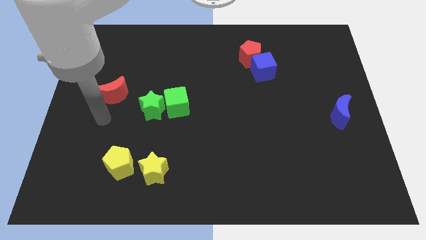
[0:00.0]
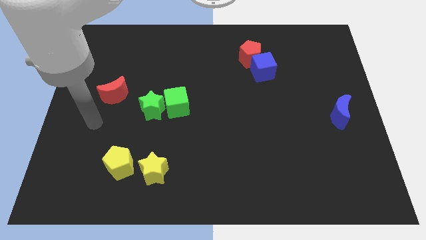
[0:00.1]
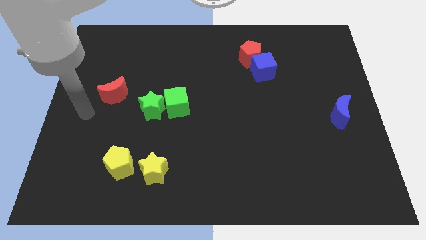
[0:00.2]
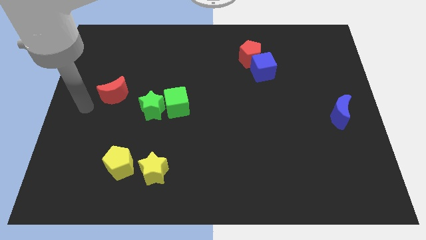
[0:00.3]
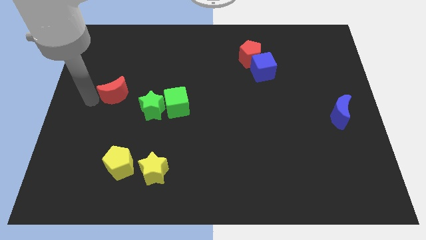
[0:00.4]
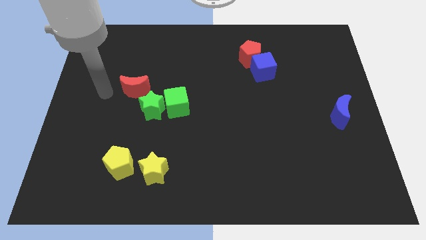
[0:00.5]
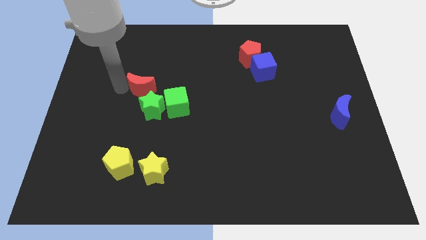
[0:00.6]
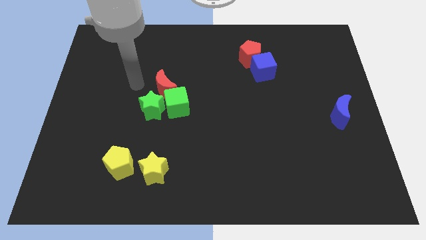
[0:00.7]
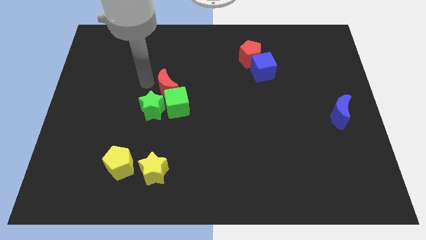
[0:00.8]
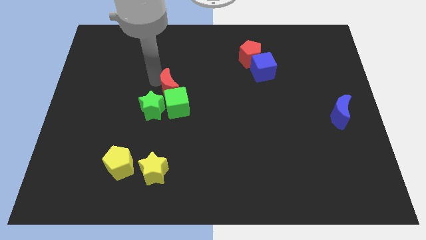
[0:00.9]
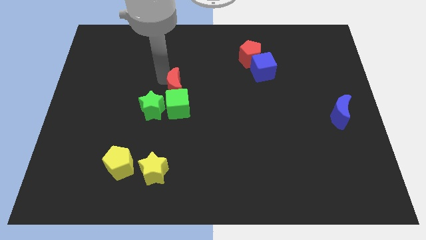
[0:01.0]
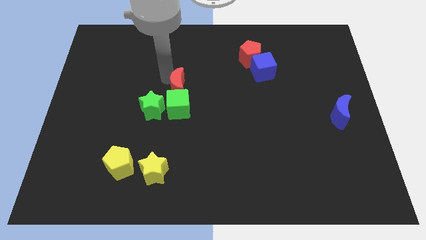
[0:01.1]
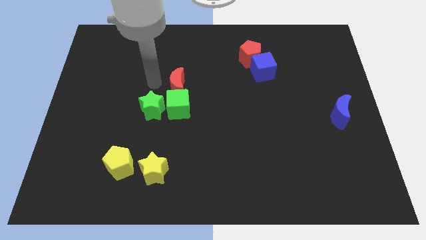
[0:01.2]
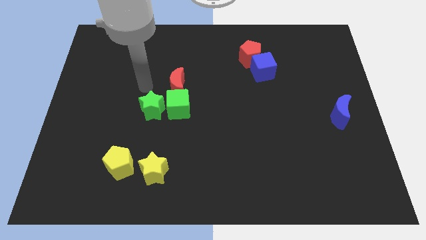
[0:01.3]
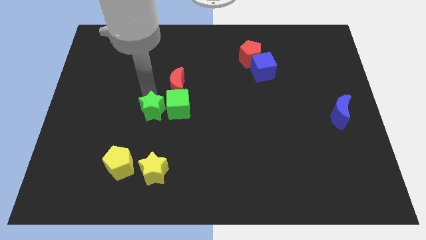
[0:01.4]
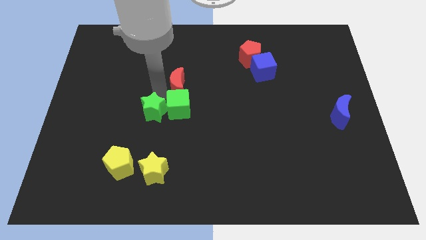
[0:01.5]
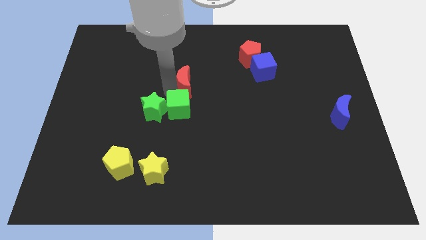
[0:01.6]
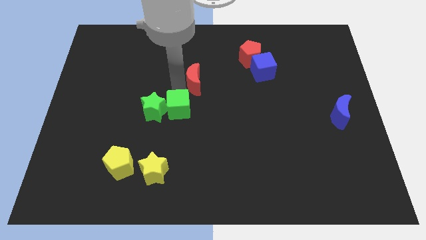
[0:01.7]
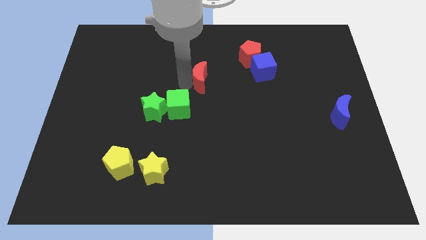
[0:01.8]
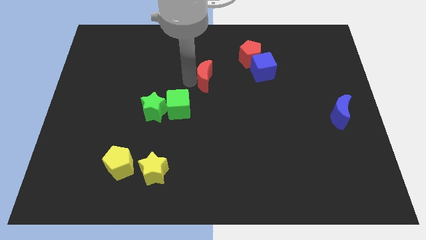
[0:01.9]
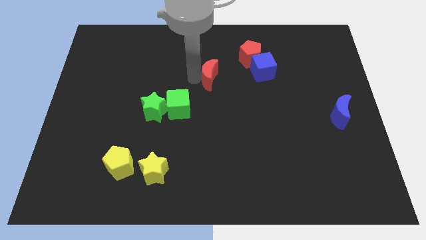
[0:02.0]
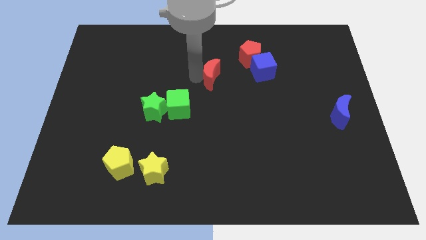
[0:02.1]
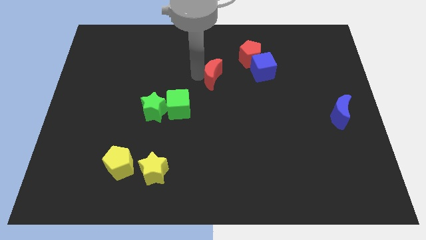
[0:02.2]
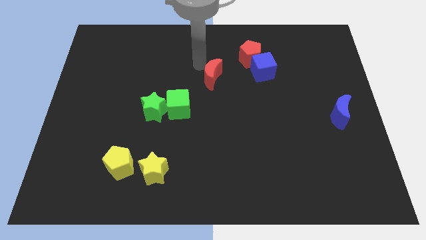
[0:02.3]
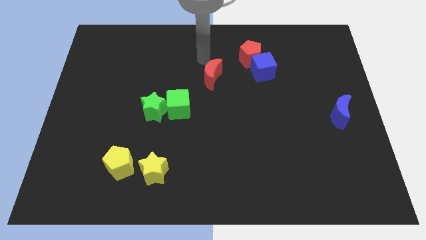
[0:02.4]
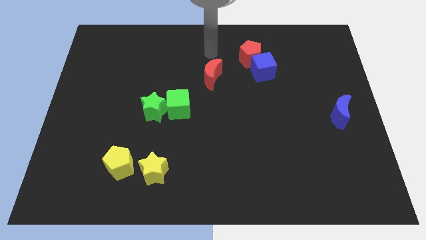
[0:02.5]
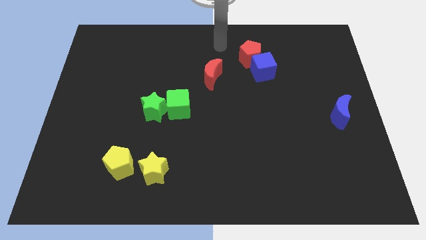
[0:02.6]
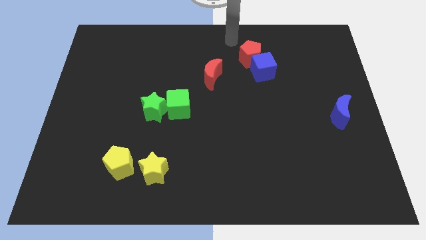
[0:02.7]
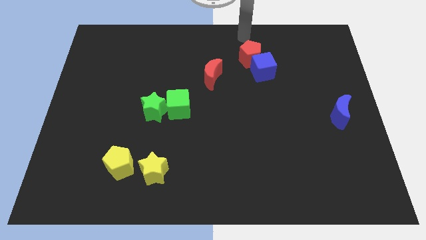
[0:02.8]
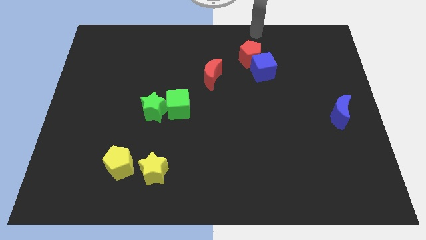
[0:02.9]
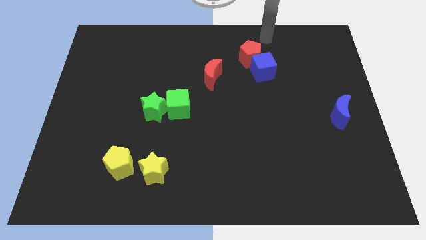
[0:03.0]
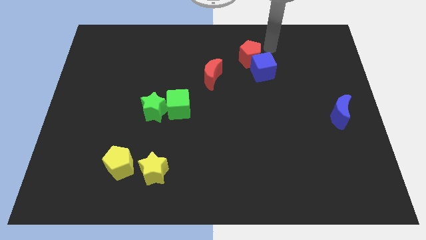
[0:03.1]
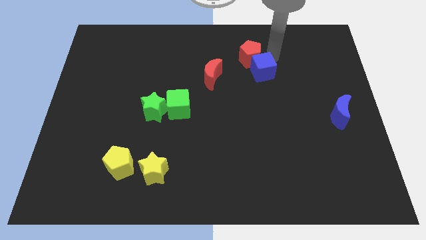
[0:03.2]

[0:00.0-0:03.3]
place red moon to the left of blue cube

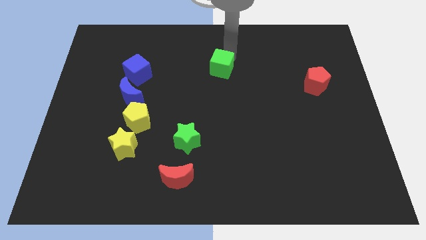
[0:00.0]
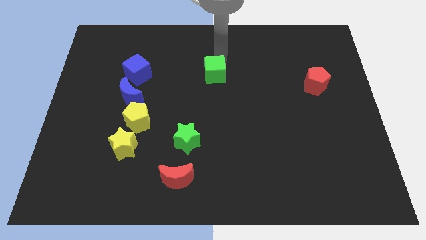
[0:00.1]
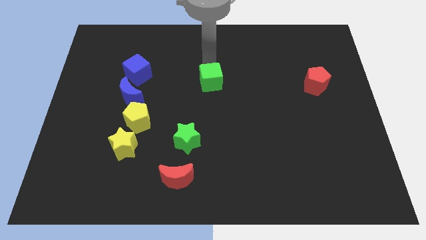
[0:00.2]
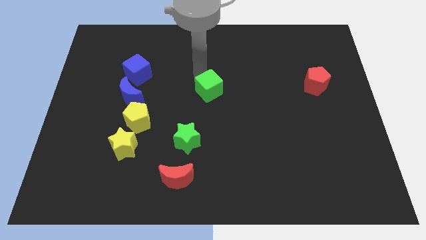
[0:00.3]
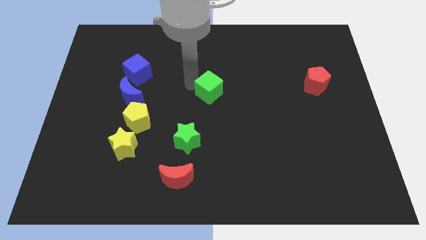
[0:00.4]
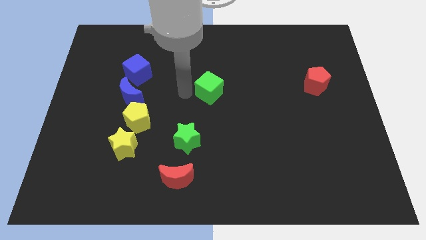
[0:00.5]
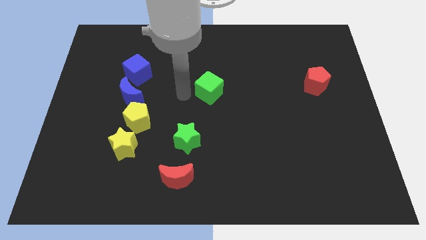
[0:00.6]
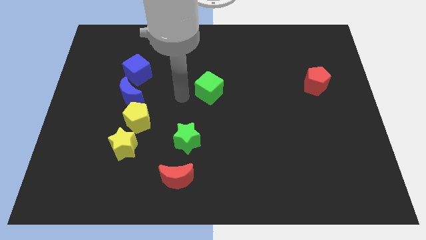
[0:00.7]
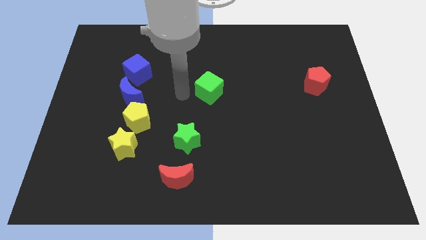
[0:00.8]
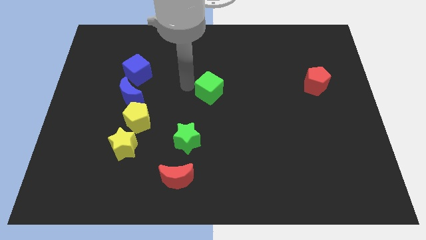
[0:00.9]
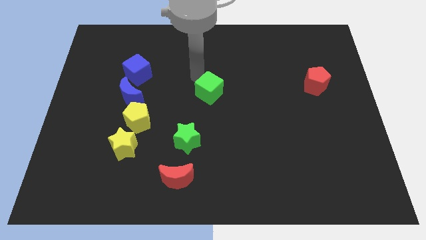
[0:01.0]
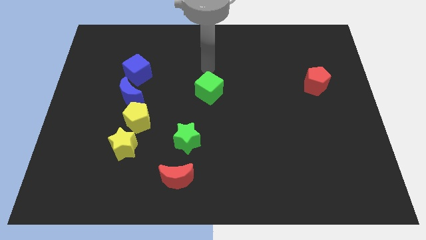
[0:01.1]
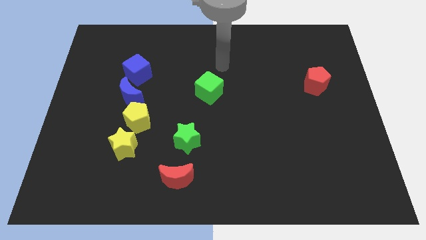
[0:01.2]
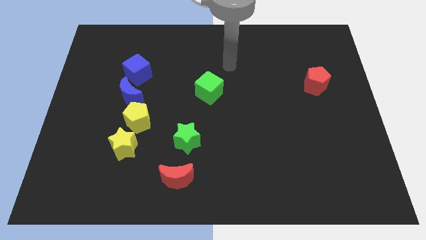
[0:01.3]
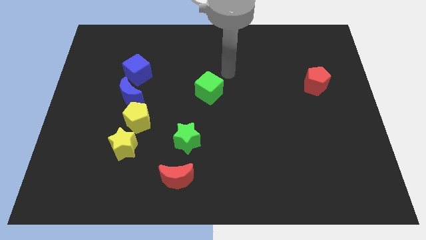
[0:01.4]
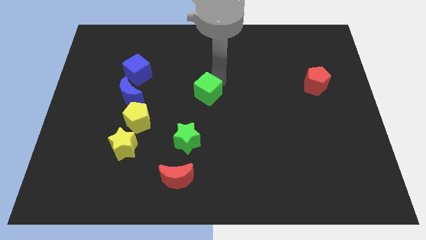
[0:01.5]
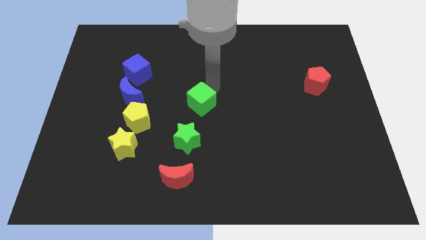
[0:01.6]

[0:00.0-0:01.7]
move the green cube to the center of the board

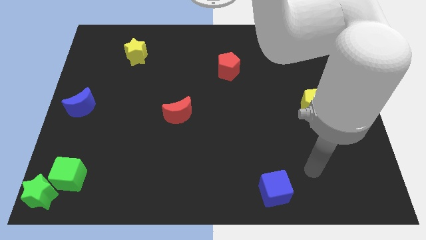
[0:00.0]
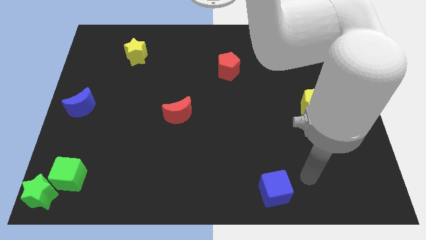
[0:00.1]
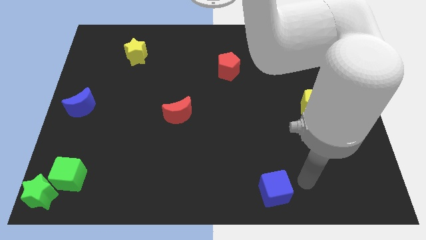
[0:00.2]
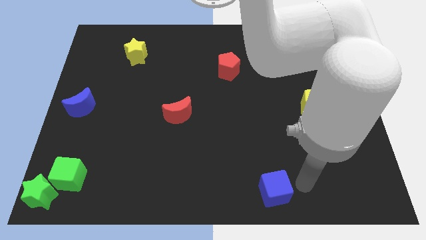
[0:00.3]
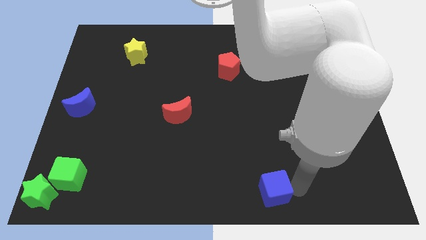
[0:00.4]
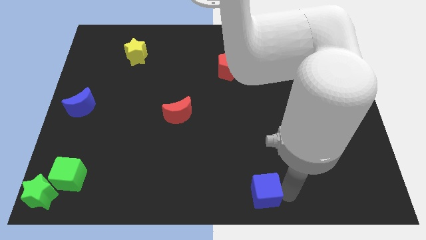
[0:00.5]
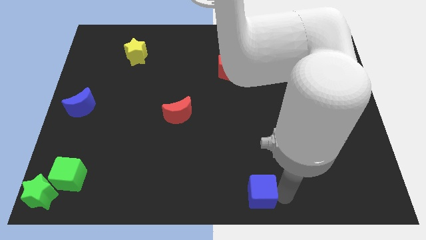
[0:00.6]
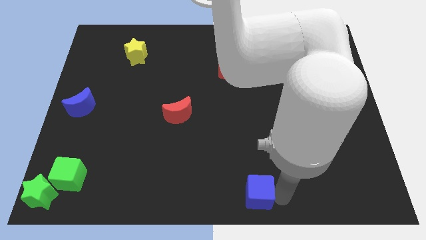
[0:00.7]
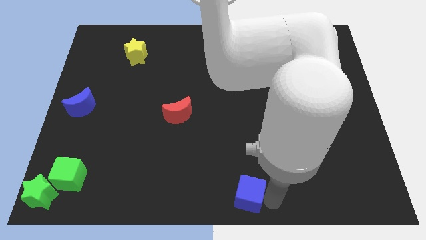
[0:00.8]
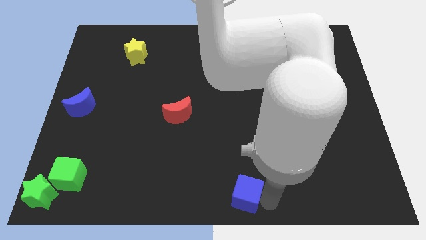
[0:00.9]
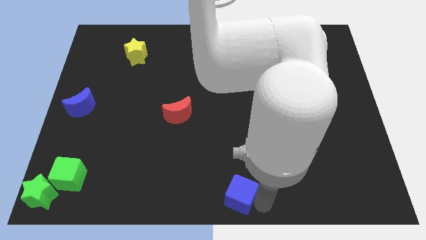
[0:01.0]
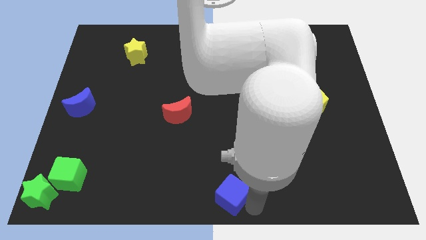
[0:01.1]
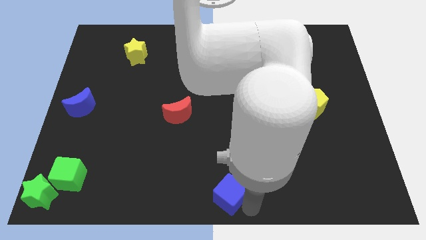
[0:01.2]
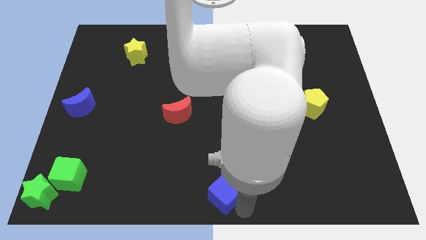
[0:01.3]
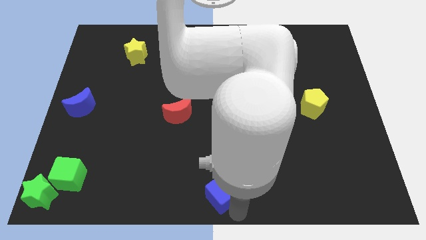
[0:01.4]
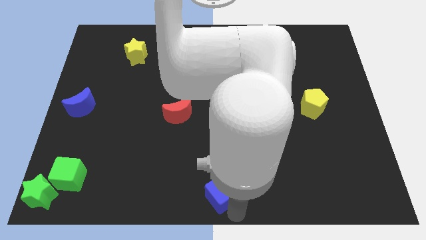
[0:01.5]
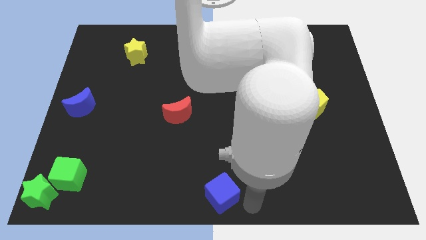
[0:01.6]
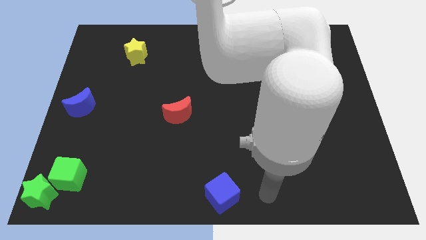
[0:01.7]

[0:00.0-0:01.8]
move the blue cube to the bottom center of the board

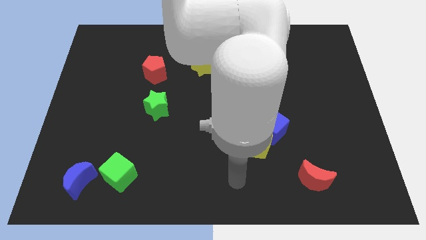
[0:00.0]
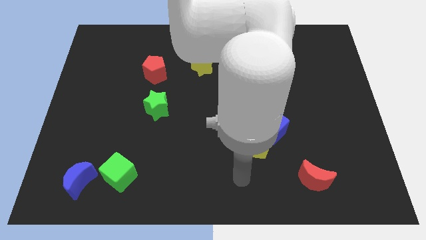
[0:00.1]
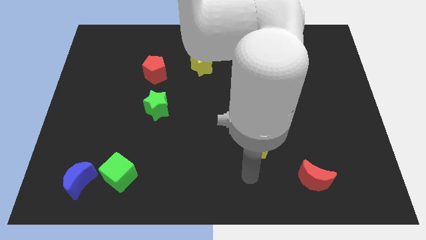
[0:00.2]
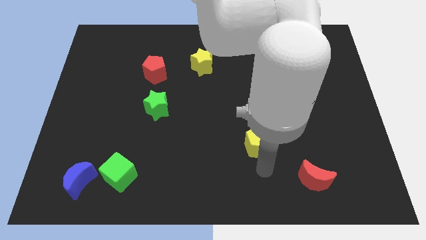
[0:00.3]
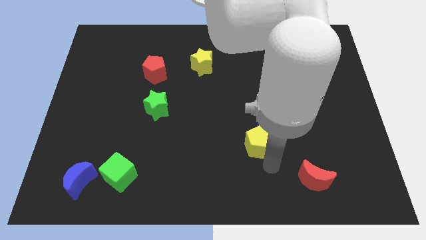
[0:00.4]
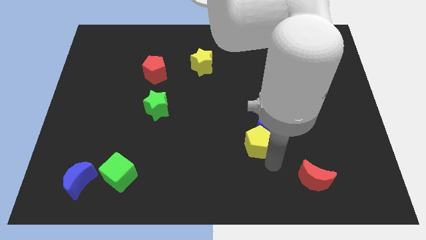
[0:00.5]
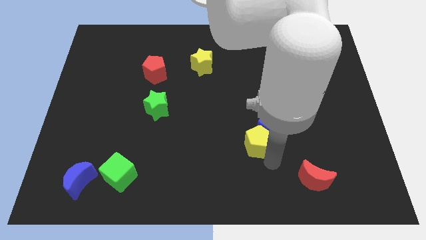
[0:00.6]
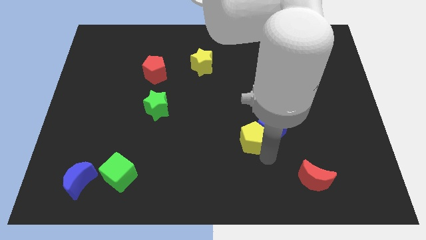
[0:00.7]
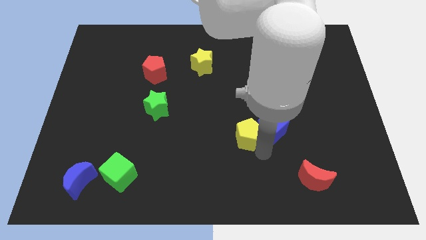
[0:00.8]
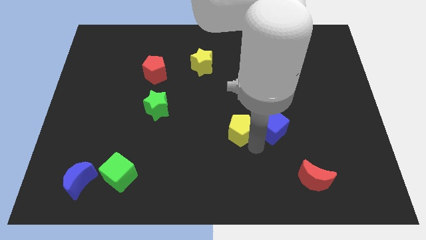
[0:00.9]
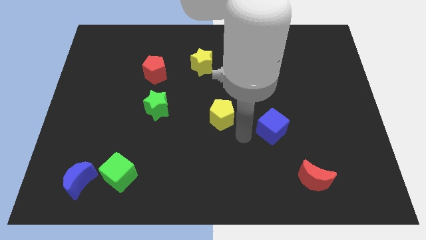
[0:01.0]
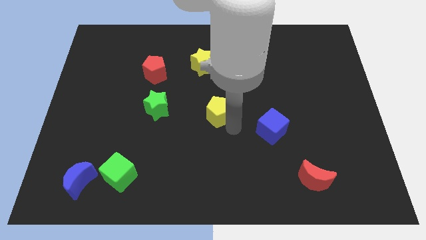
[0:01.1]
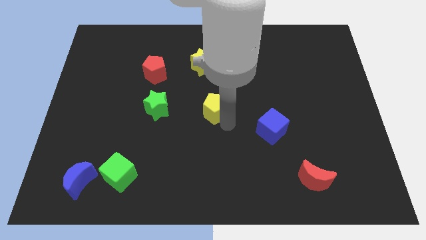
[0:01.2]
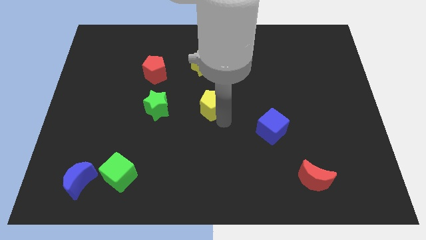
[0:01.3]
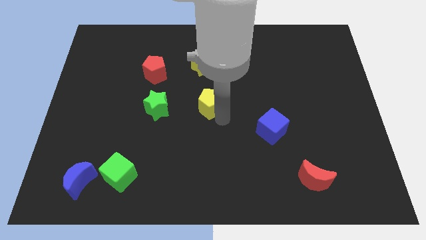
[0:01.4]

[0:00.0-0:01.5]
move the yellow pentagon to the right of the green star

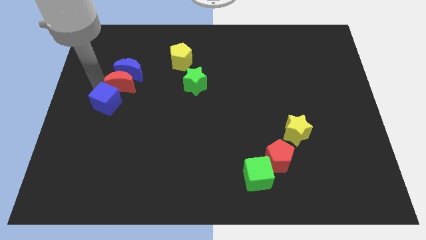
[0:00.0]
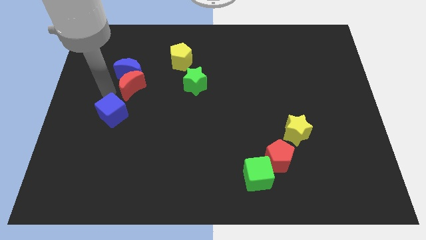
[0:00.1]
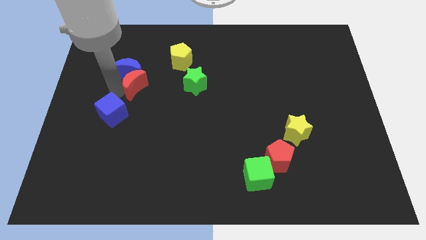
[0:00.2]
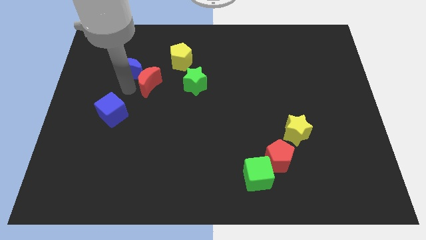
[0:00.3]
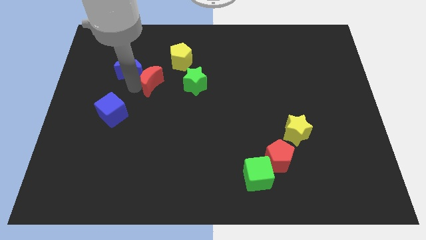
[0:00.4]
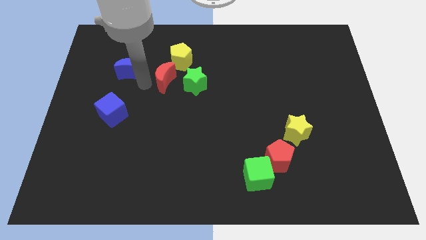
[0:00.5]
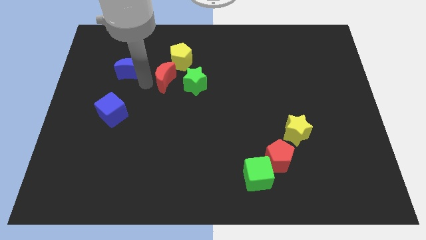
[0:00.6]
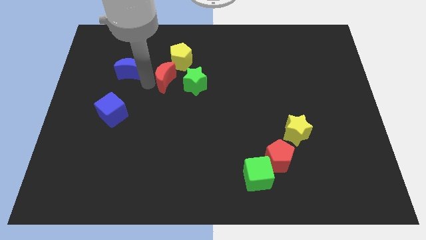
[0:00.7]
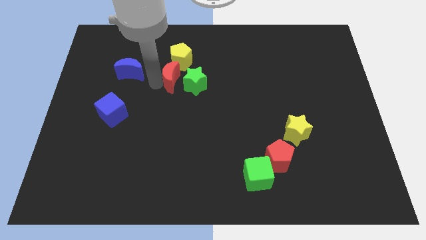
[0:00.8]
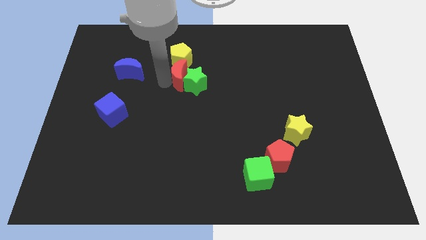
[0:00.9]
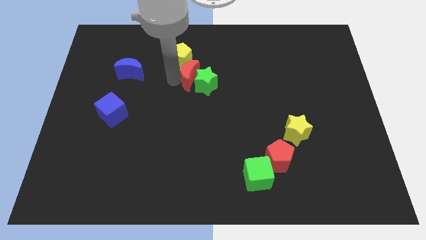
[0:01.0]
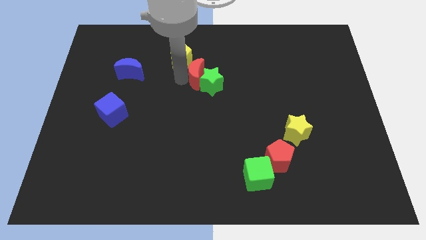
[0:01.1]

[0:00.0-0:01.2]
push the red crescent into the green star
